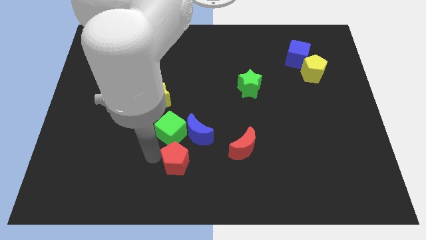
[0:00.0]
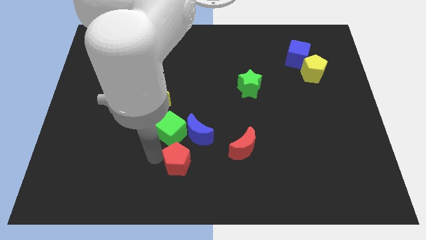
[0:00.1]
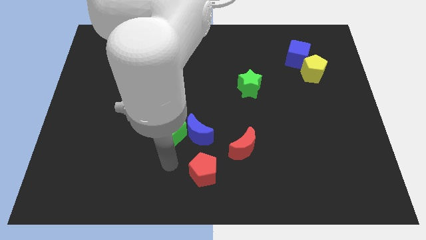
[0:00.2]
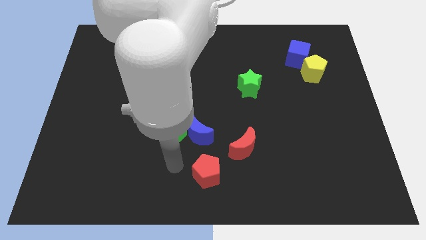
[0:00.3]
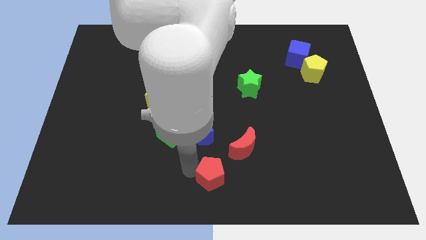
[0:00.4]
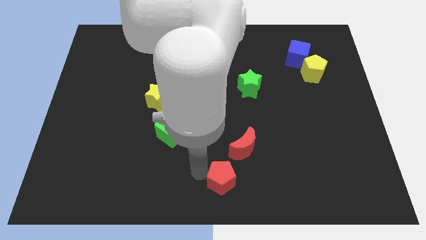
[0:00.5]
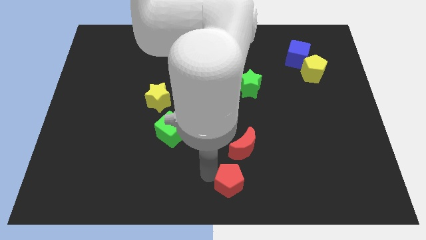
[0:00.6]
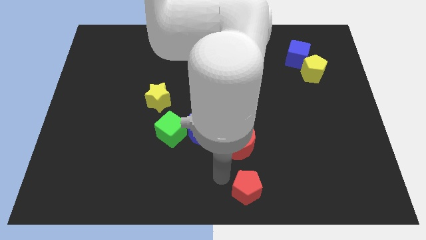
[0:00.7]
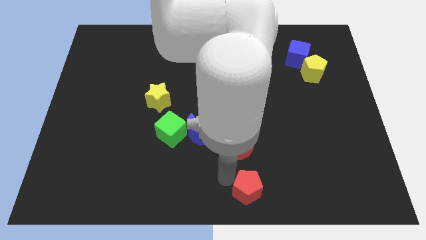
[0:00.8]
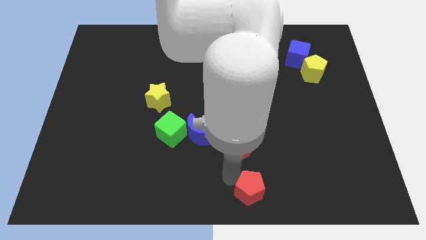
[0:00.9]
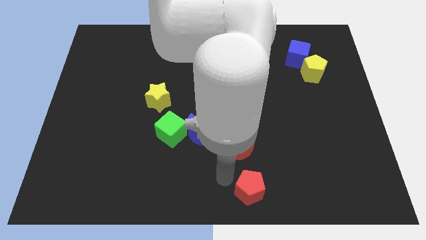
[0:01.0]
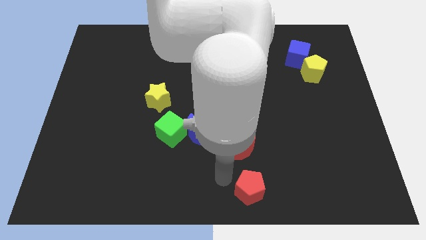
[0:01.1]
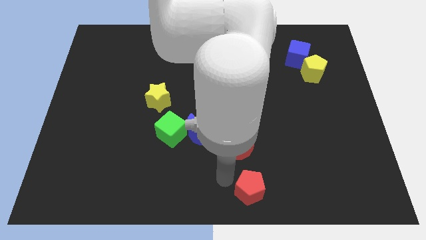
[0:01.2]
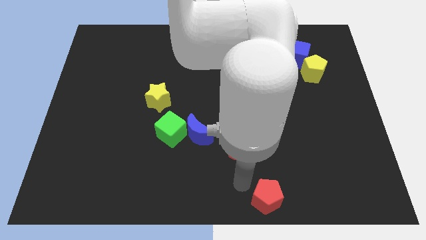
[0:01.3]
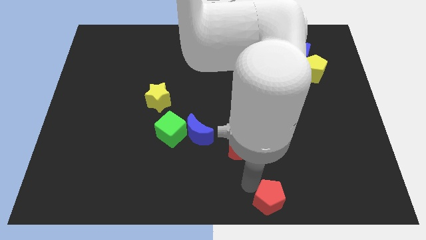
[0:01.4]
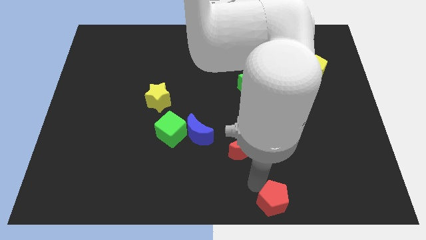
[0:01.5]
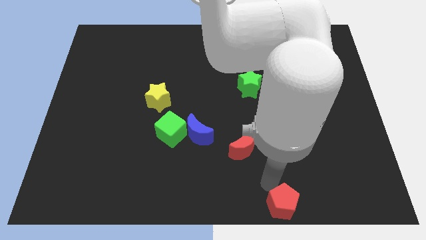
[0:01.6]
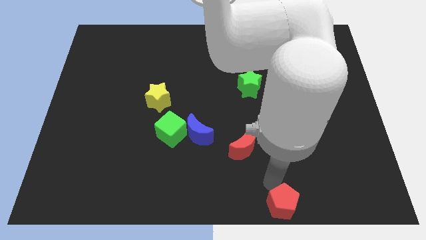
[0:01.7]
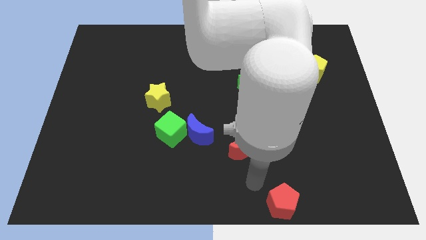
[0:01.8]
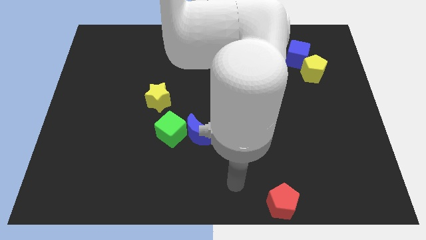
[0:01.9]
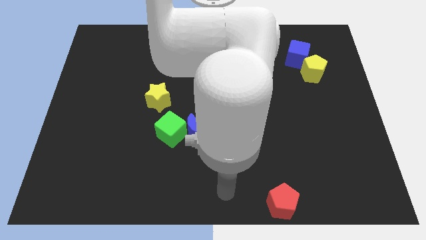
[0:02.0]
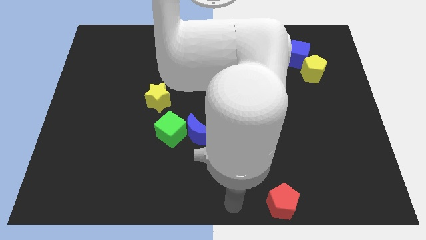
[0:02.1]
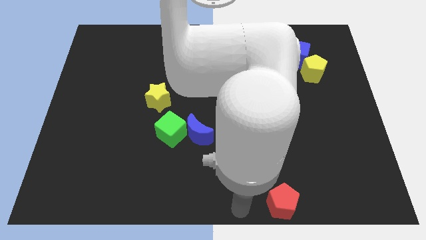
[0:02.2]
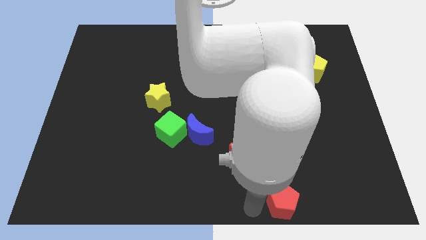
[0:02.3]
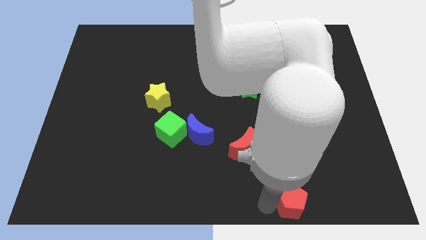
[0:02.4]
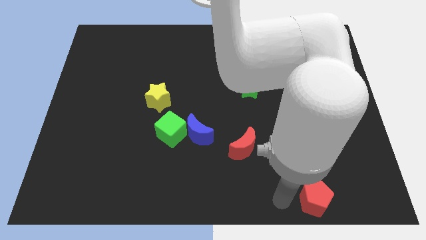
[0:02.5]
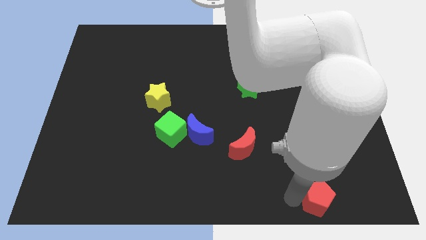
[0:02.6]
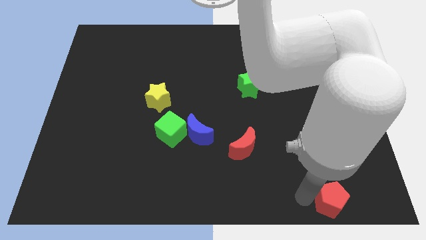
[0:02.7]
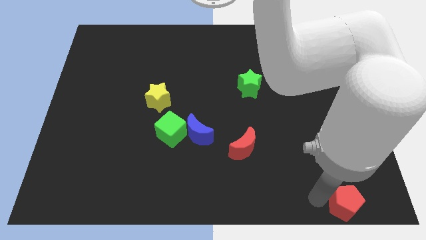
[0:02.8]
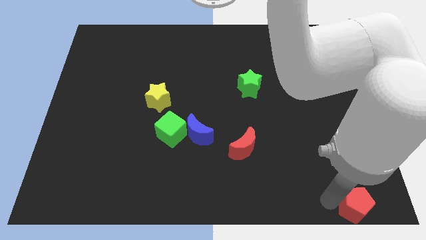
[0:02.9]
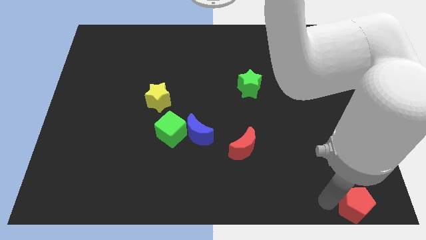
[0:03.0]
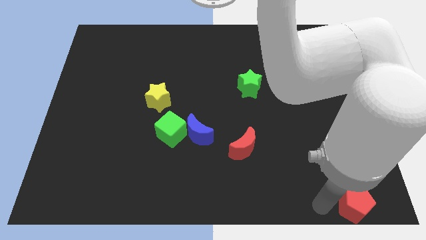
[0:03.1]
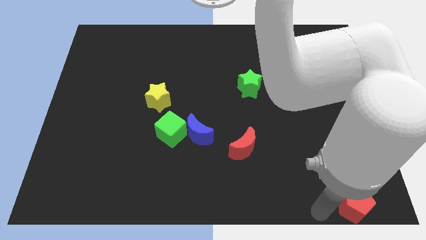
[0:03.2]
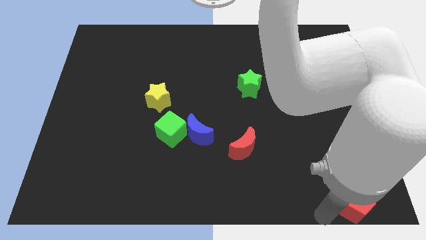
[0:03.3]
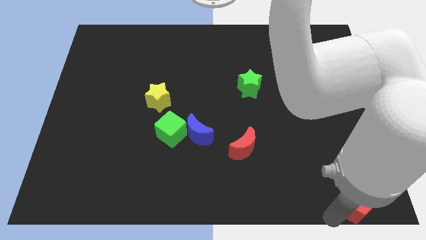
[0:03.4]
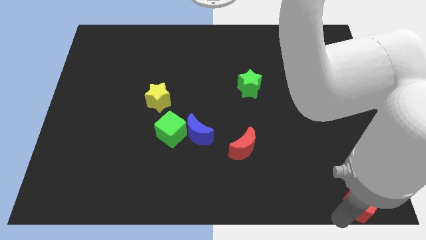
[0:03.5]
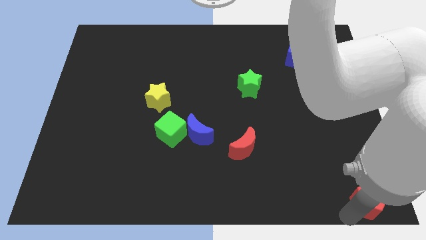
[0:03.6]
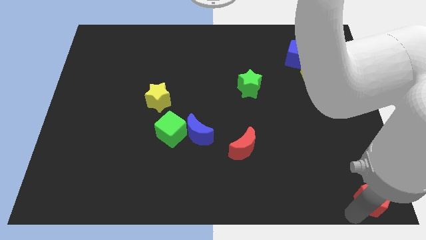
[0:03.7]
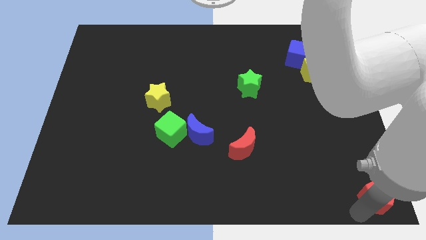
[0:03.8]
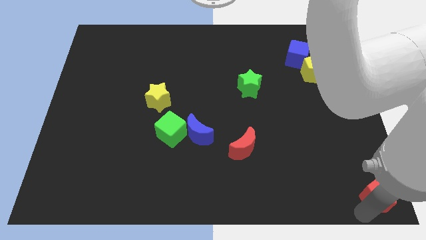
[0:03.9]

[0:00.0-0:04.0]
place the red pentagon at the bottom right corner of the board

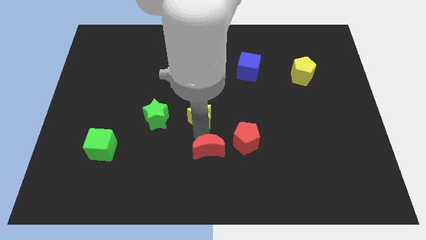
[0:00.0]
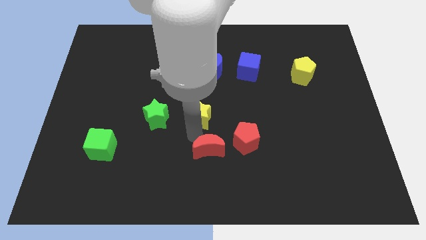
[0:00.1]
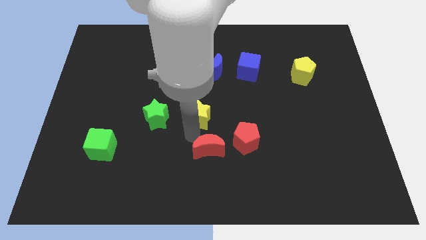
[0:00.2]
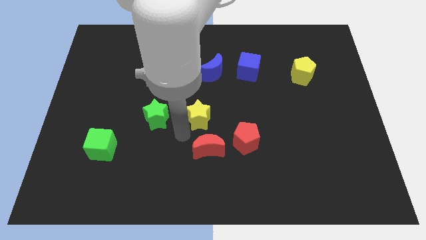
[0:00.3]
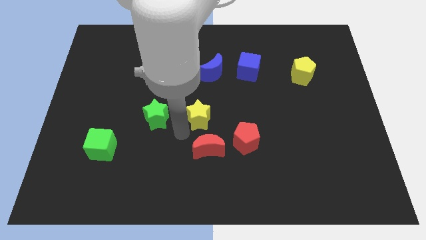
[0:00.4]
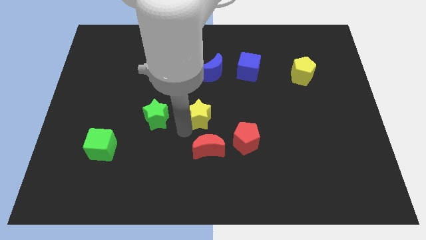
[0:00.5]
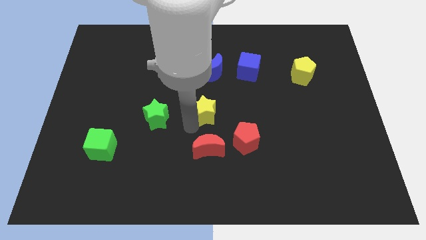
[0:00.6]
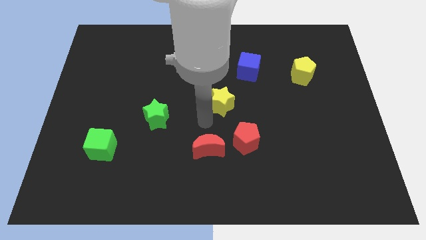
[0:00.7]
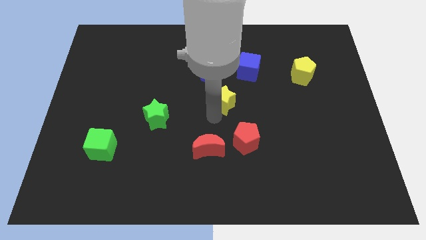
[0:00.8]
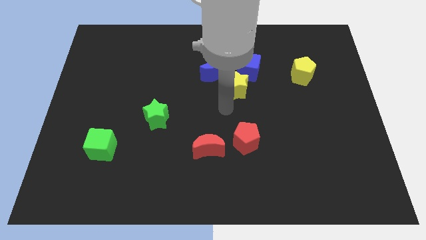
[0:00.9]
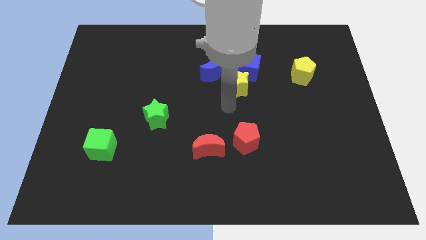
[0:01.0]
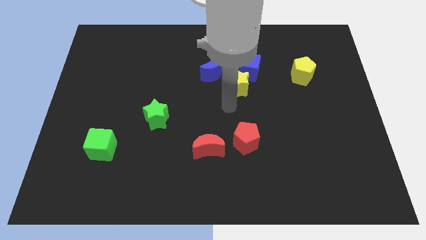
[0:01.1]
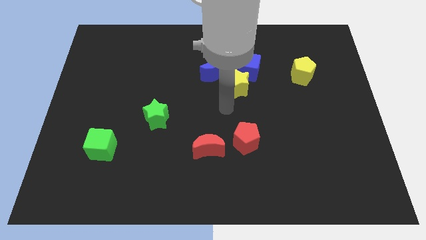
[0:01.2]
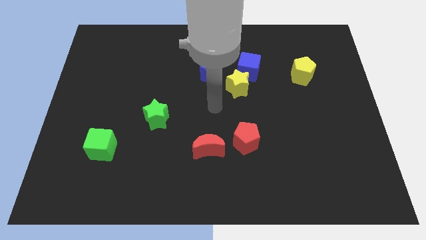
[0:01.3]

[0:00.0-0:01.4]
put the yellow star diagonally top right to the red moon

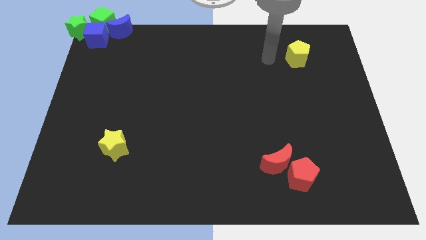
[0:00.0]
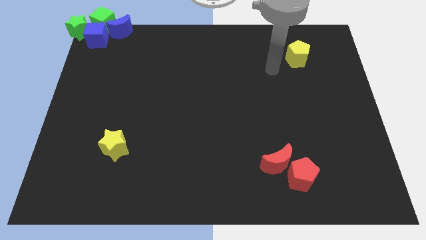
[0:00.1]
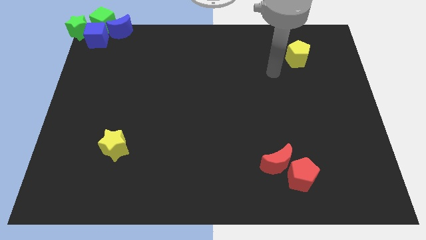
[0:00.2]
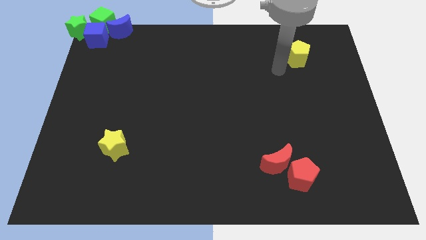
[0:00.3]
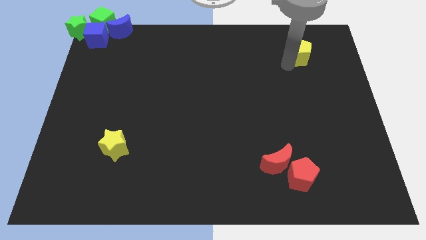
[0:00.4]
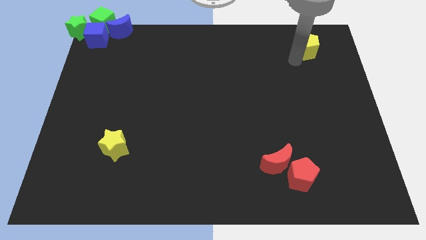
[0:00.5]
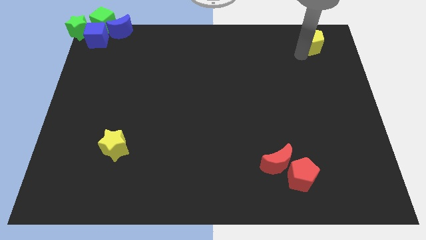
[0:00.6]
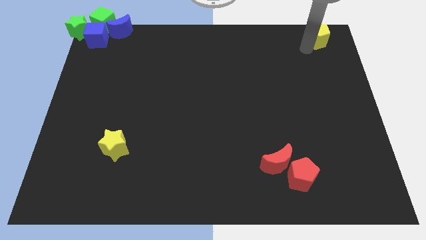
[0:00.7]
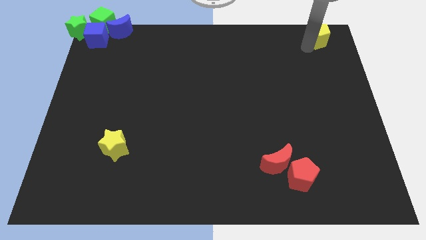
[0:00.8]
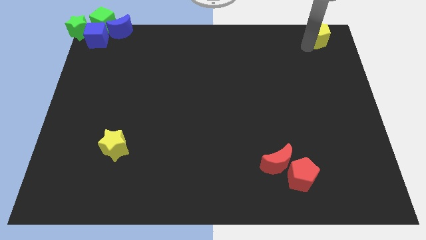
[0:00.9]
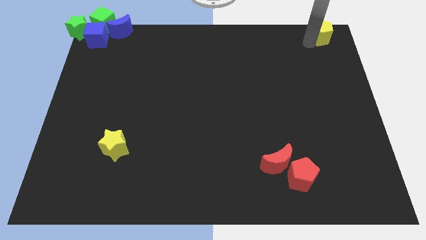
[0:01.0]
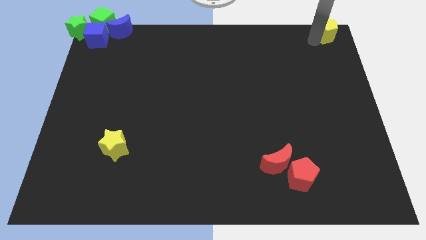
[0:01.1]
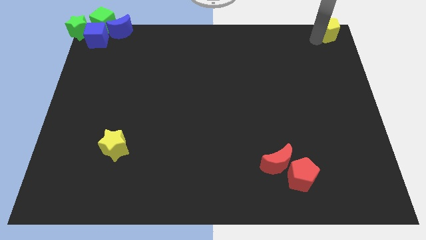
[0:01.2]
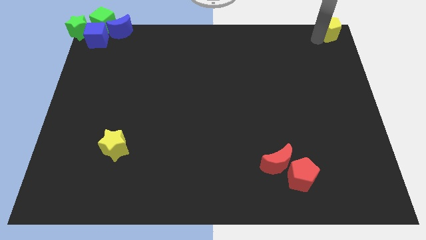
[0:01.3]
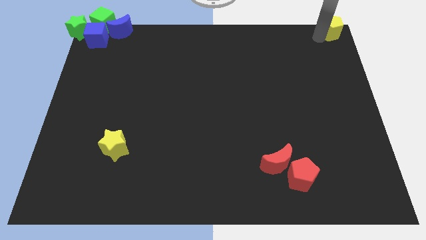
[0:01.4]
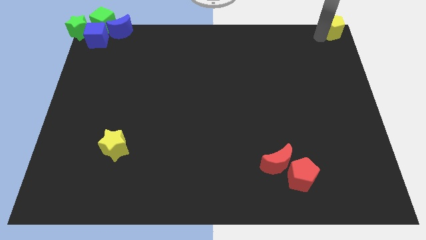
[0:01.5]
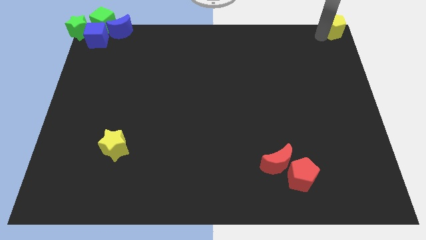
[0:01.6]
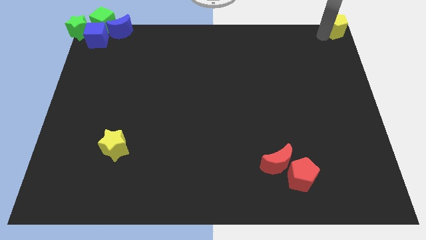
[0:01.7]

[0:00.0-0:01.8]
place the yellow pentagon at the top right corner of the board

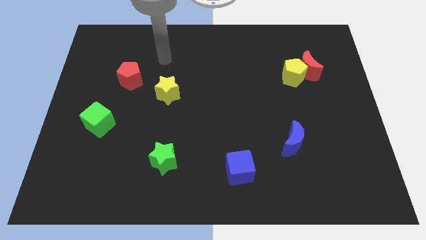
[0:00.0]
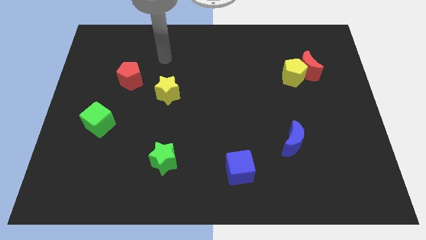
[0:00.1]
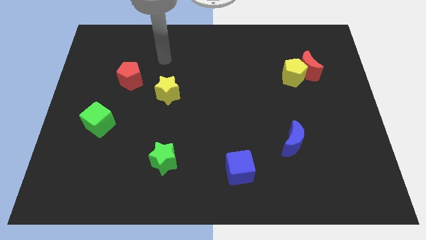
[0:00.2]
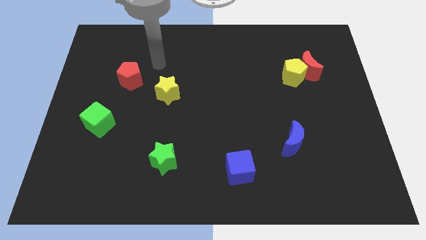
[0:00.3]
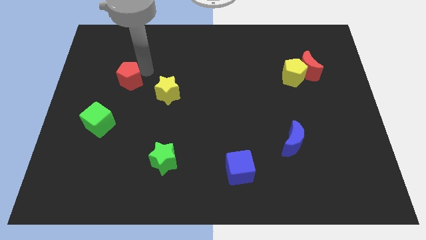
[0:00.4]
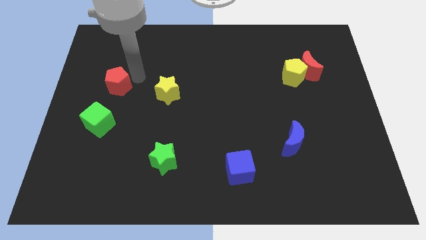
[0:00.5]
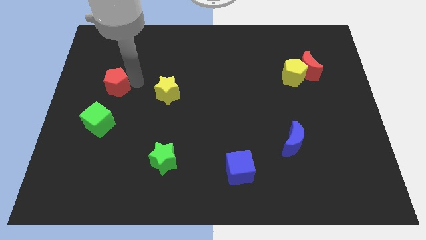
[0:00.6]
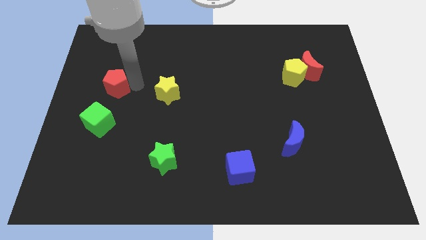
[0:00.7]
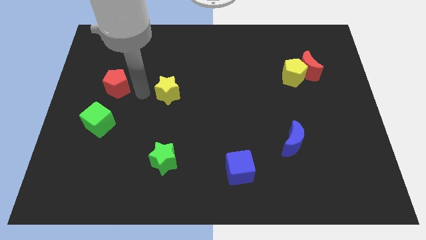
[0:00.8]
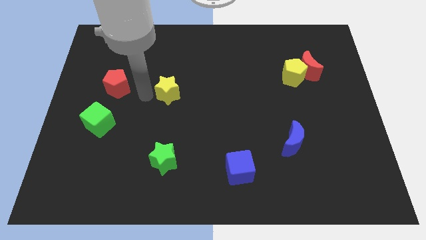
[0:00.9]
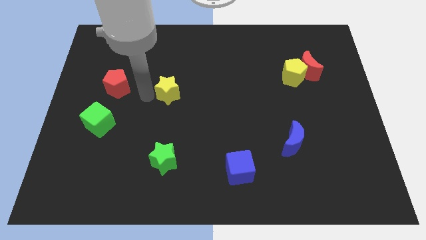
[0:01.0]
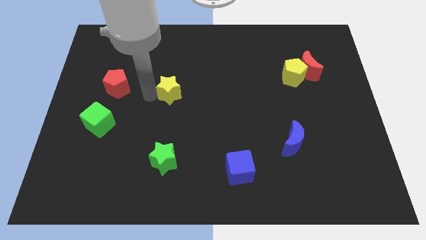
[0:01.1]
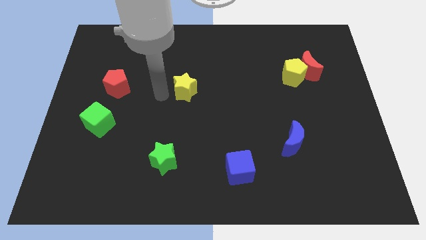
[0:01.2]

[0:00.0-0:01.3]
put the red pentagon parallel left to the yellow star

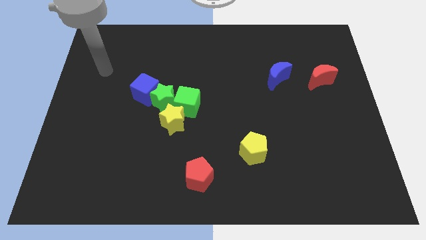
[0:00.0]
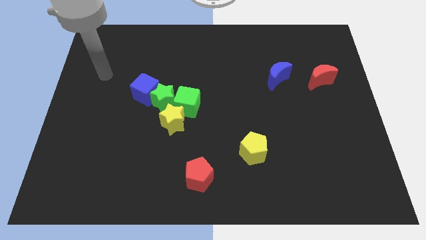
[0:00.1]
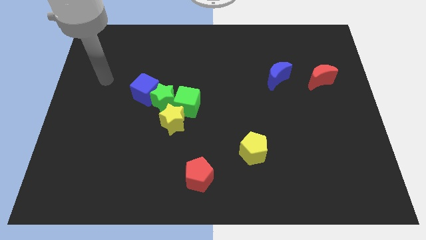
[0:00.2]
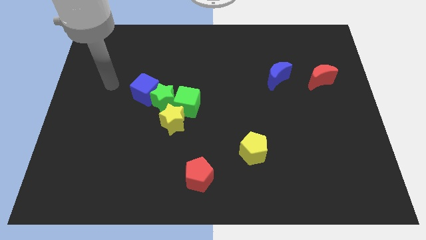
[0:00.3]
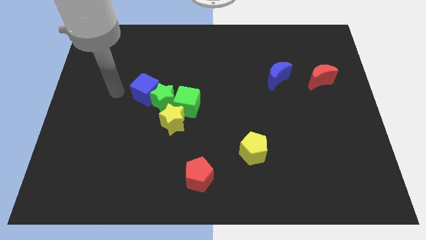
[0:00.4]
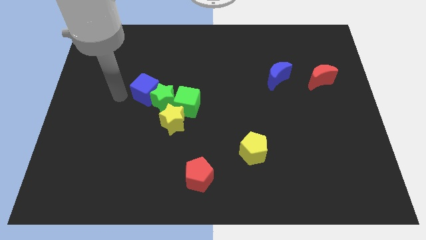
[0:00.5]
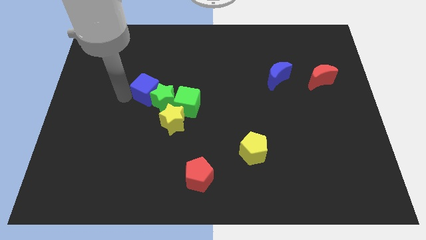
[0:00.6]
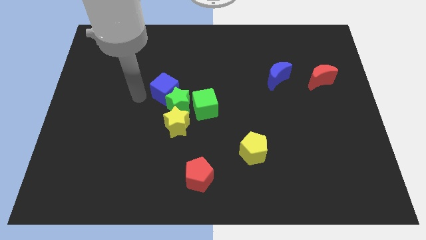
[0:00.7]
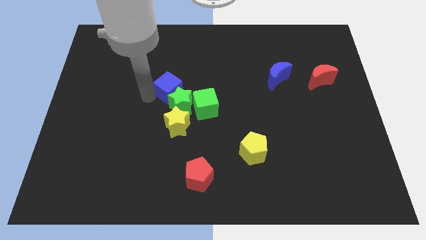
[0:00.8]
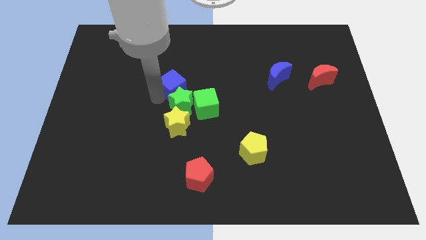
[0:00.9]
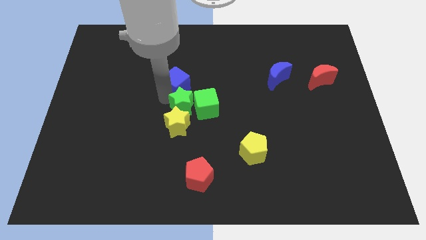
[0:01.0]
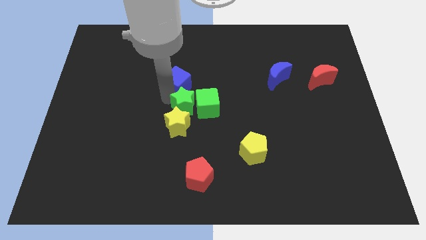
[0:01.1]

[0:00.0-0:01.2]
point your arm close to green star
